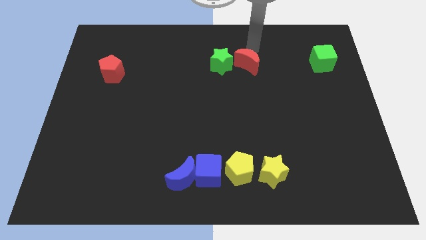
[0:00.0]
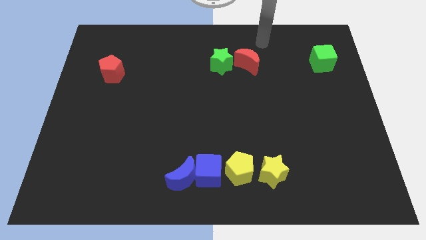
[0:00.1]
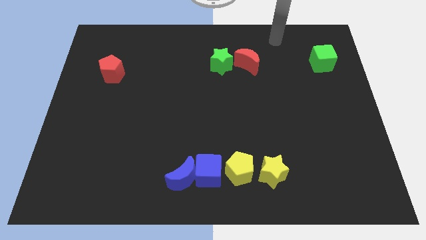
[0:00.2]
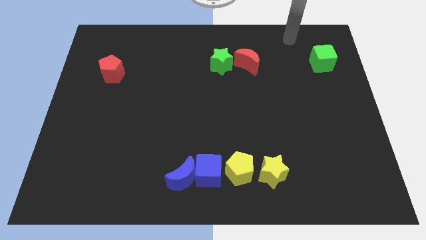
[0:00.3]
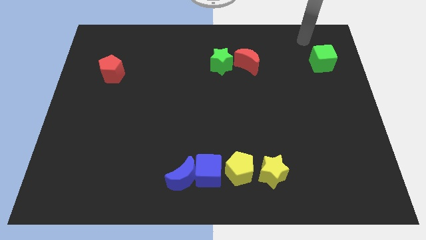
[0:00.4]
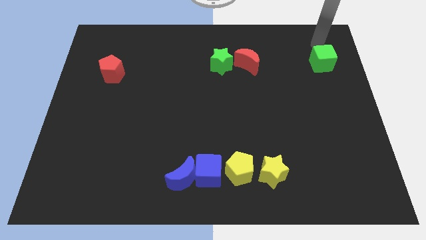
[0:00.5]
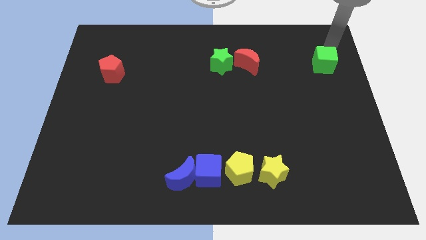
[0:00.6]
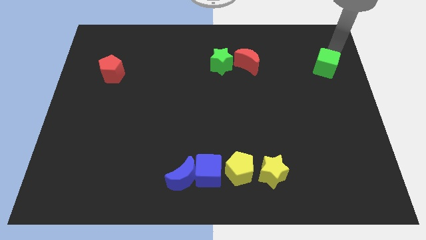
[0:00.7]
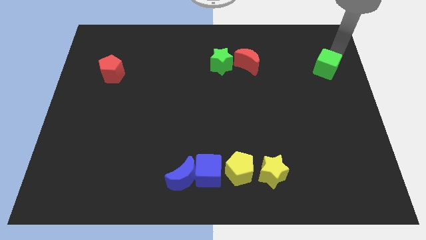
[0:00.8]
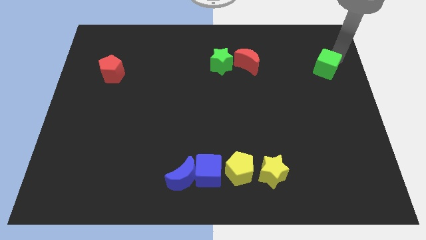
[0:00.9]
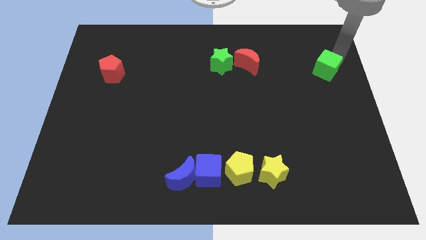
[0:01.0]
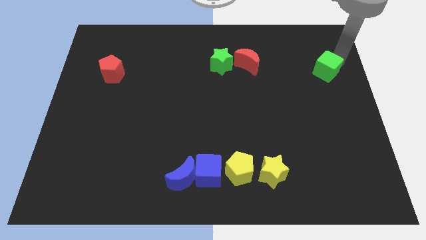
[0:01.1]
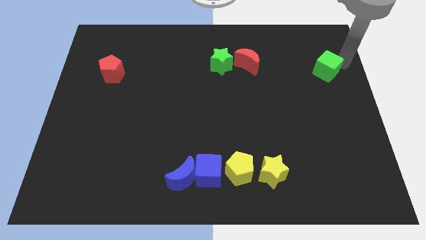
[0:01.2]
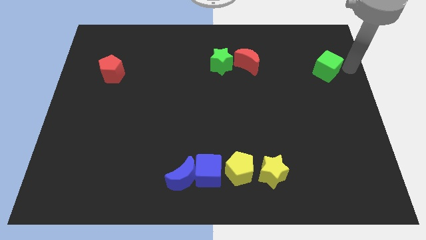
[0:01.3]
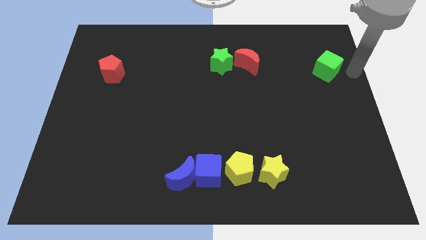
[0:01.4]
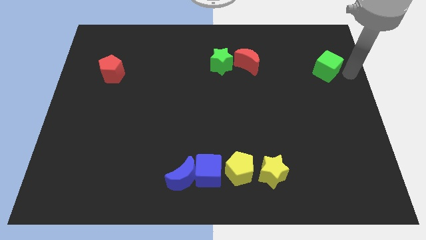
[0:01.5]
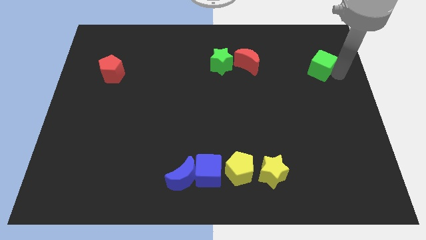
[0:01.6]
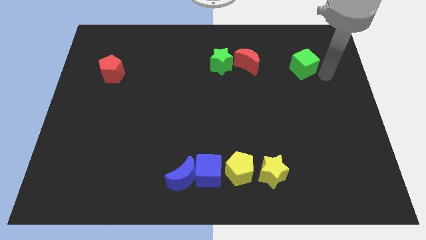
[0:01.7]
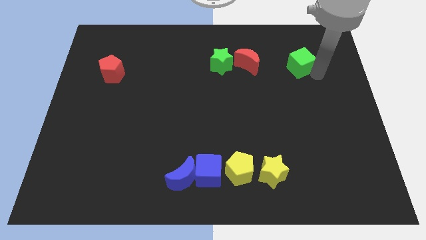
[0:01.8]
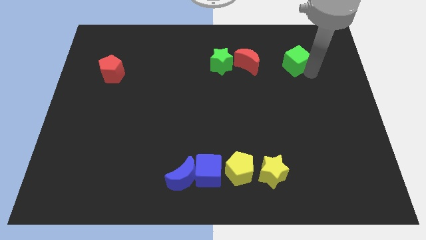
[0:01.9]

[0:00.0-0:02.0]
push the green cube towards the red moon

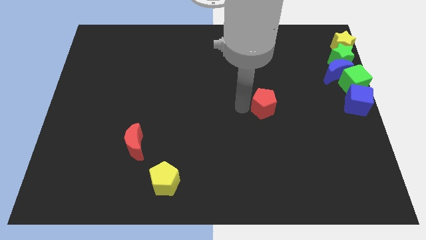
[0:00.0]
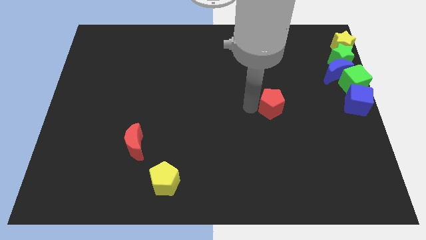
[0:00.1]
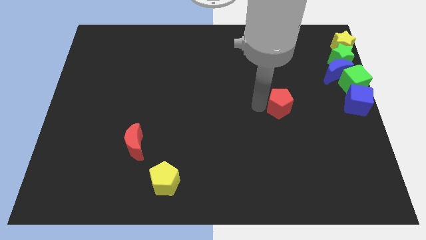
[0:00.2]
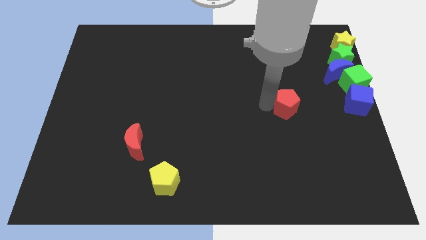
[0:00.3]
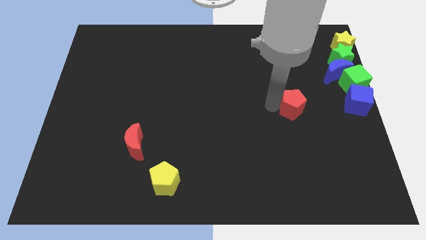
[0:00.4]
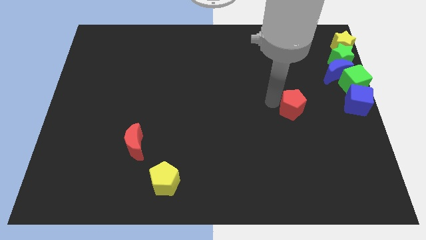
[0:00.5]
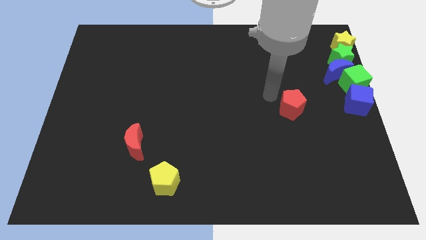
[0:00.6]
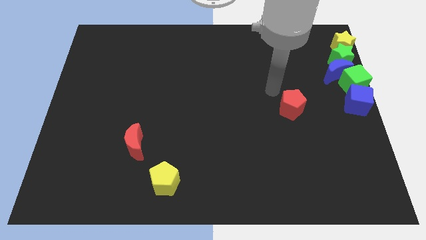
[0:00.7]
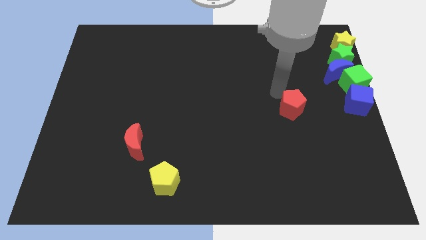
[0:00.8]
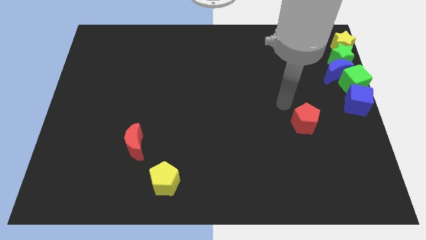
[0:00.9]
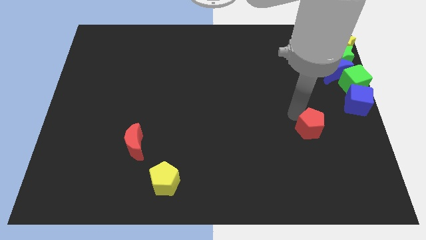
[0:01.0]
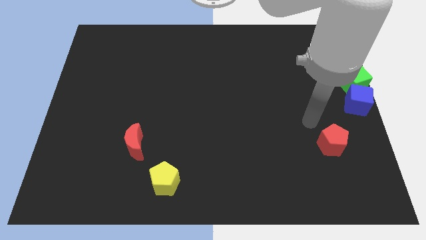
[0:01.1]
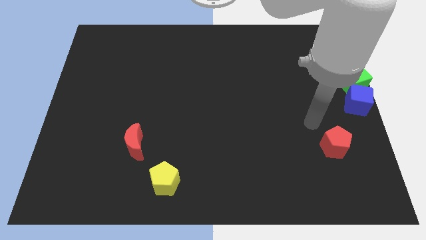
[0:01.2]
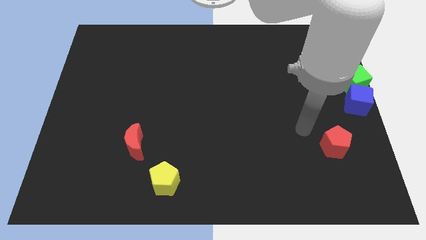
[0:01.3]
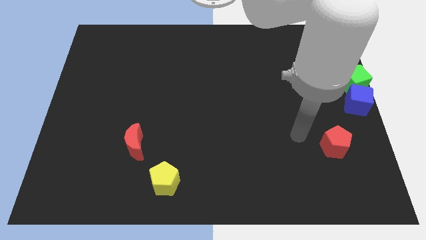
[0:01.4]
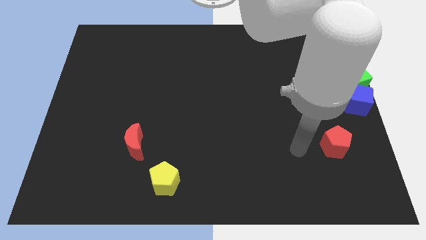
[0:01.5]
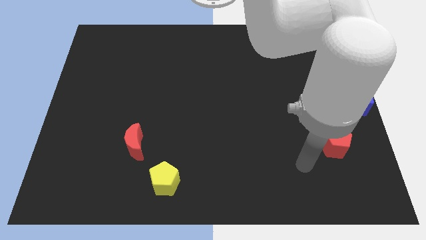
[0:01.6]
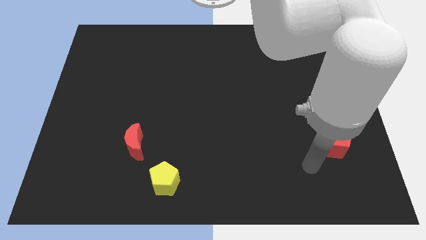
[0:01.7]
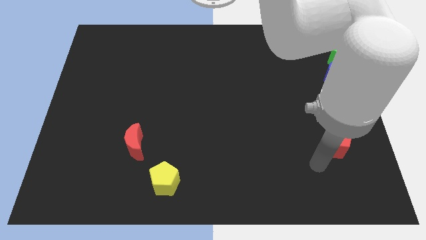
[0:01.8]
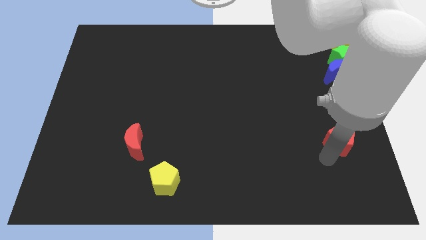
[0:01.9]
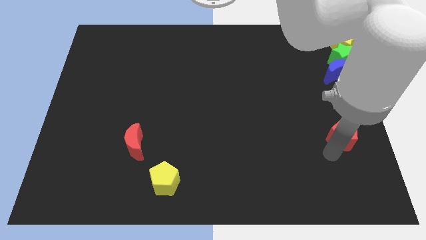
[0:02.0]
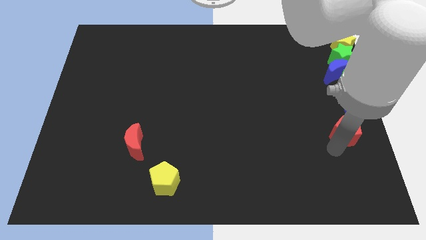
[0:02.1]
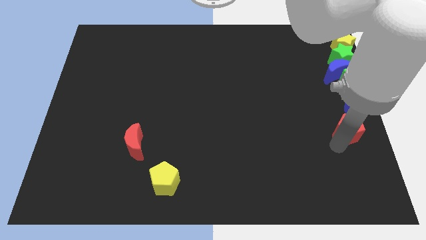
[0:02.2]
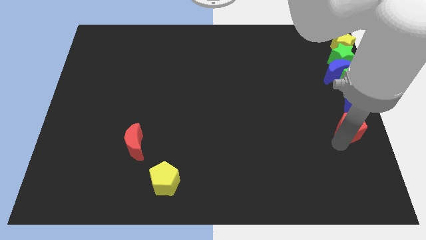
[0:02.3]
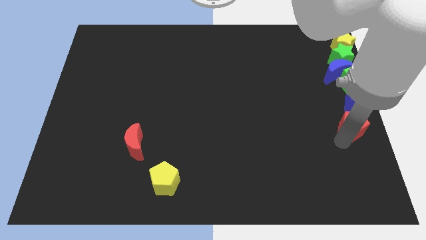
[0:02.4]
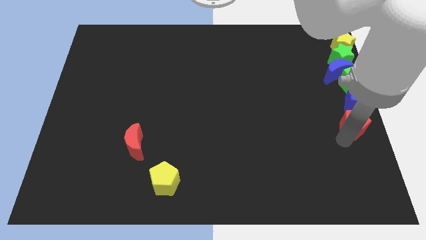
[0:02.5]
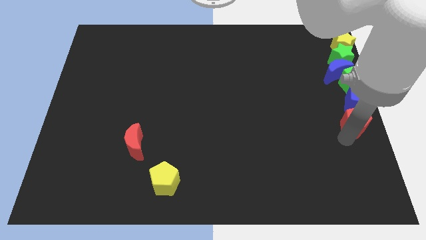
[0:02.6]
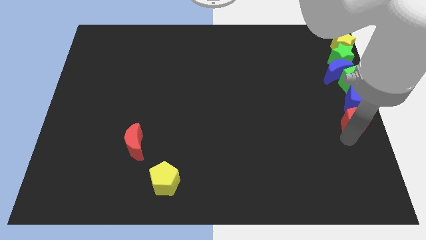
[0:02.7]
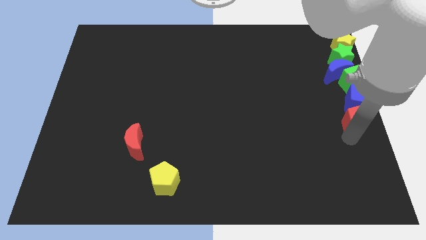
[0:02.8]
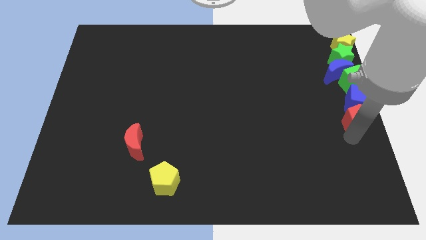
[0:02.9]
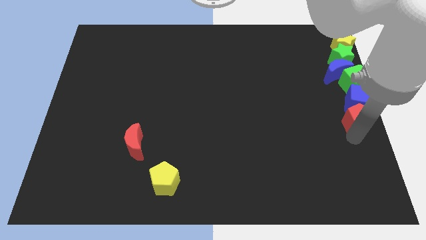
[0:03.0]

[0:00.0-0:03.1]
drag red pentagon below to the blue cube

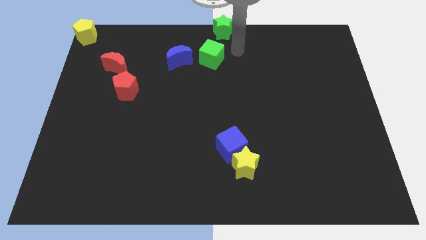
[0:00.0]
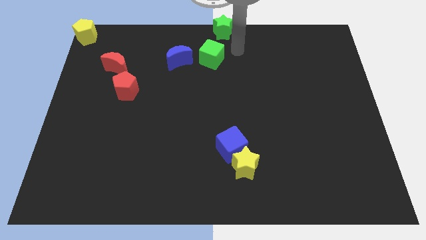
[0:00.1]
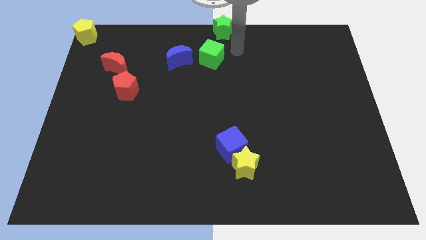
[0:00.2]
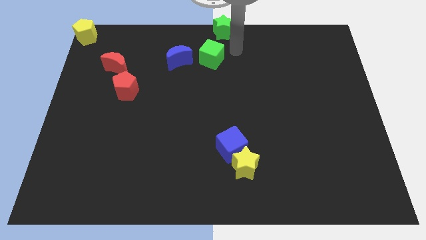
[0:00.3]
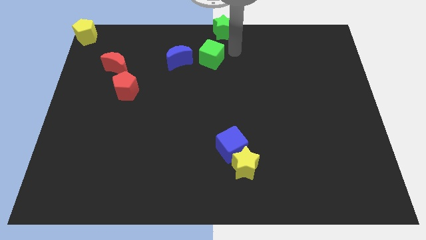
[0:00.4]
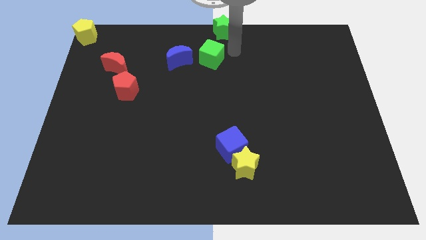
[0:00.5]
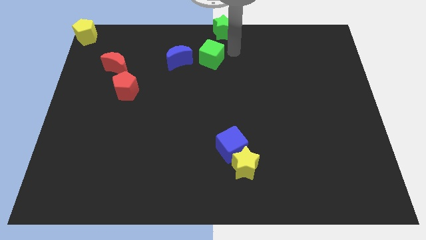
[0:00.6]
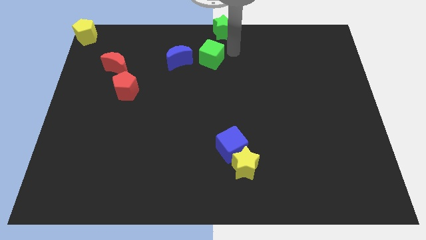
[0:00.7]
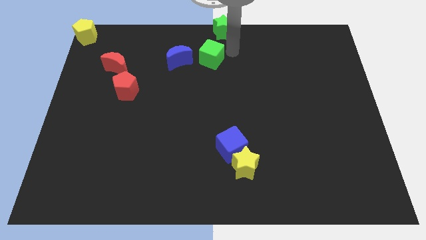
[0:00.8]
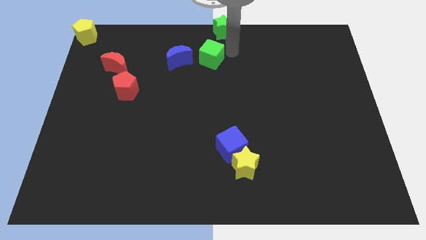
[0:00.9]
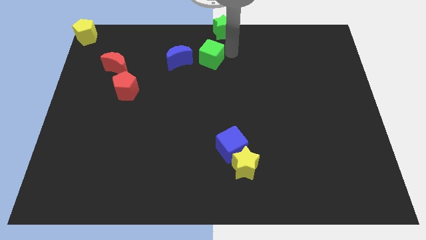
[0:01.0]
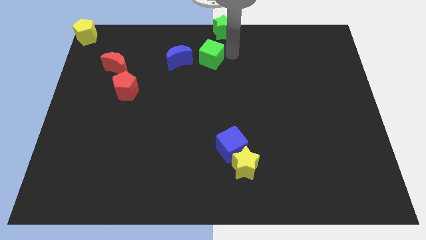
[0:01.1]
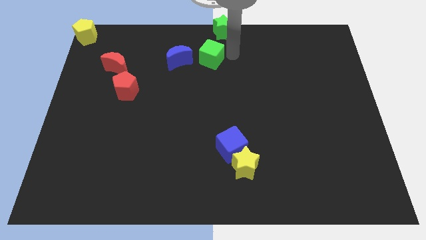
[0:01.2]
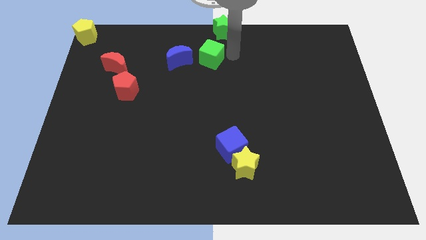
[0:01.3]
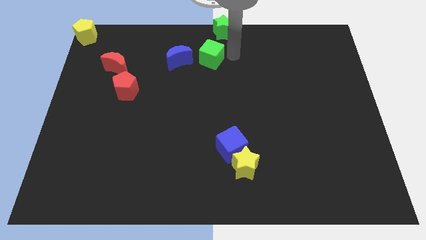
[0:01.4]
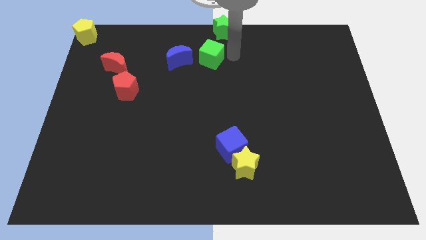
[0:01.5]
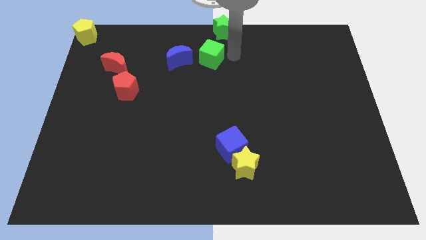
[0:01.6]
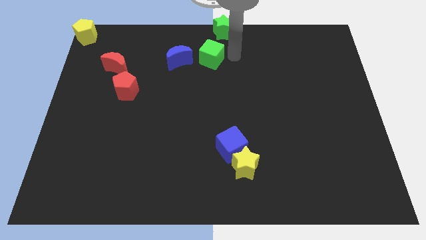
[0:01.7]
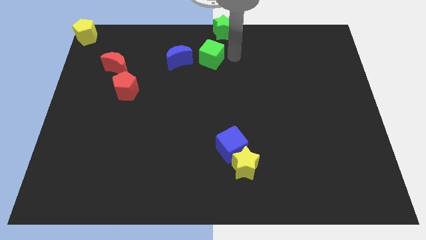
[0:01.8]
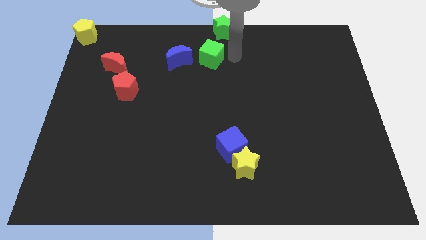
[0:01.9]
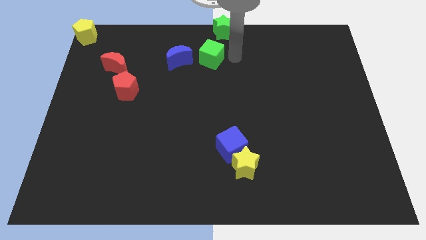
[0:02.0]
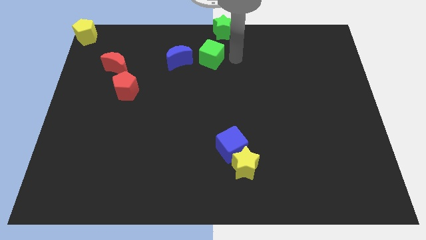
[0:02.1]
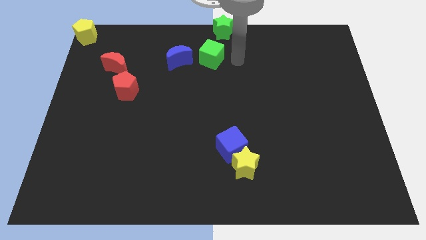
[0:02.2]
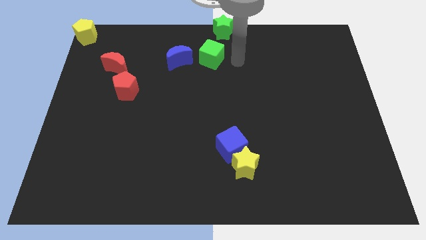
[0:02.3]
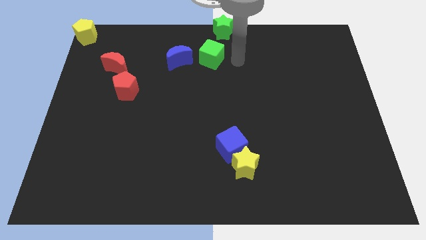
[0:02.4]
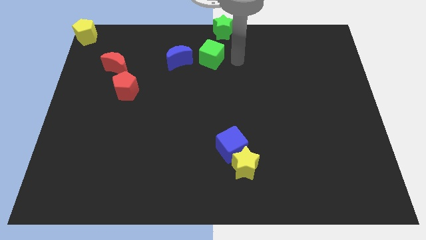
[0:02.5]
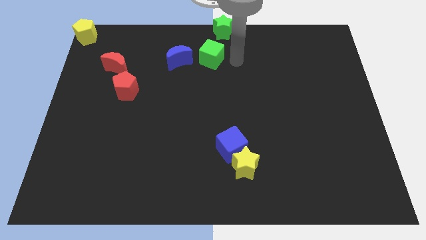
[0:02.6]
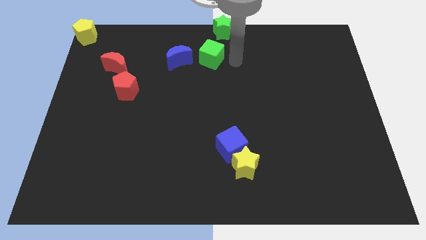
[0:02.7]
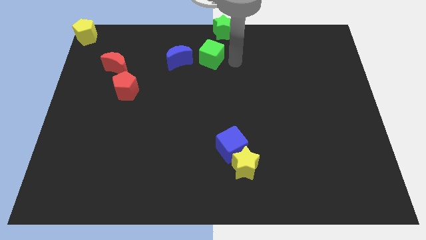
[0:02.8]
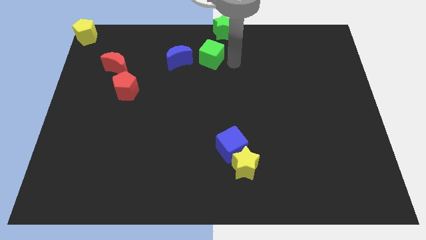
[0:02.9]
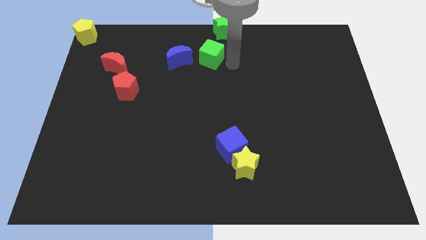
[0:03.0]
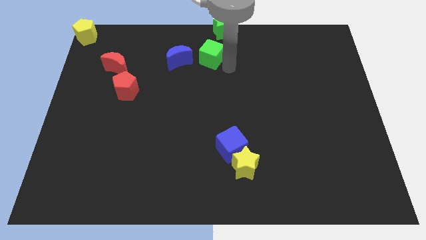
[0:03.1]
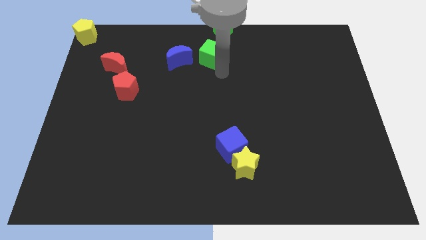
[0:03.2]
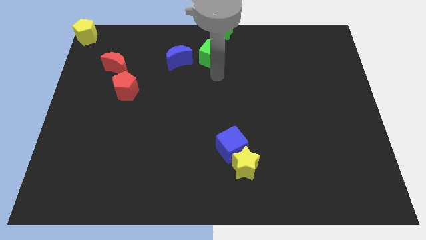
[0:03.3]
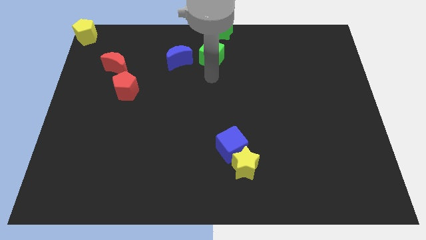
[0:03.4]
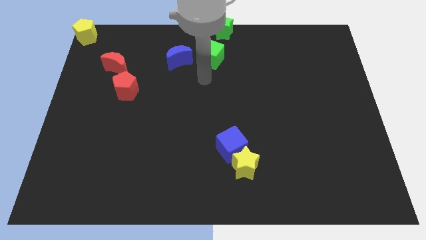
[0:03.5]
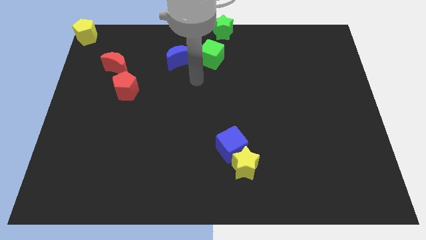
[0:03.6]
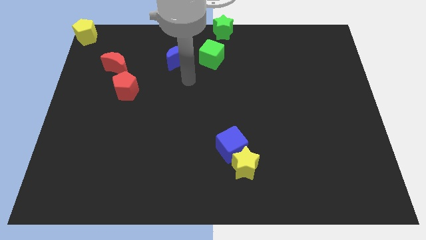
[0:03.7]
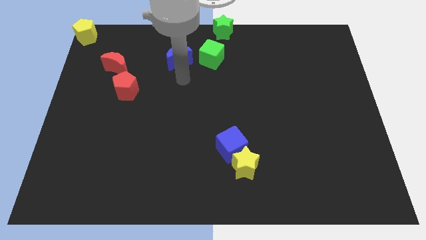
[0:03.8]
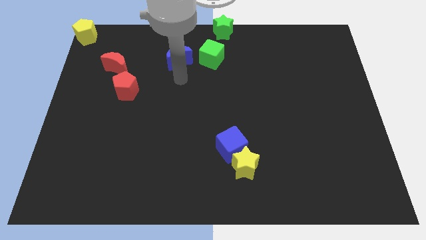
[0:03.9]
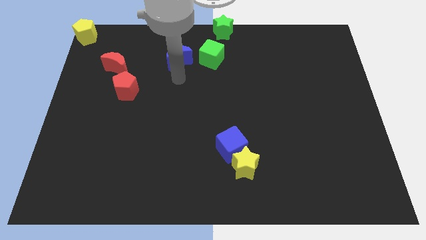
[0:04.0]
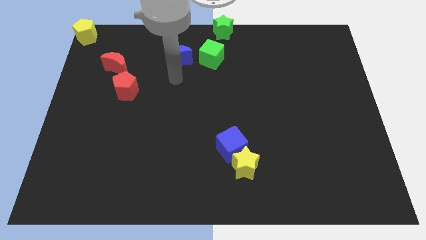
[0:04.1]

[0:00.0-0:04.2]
move your arm towards the blue crescent
